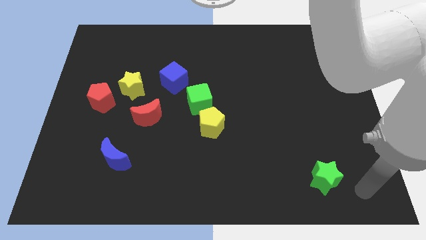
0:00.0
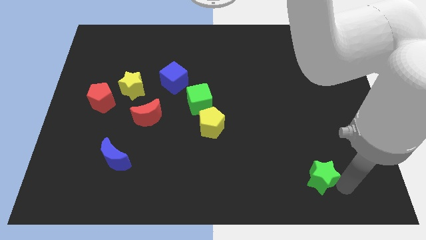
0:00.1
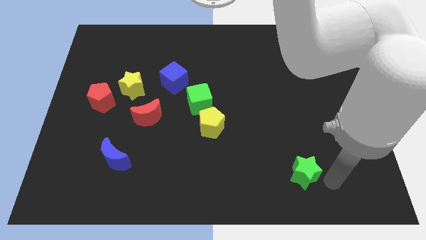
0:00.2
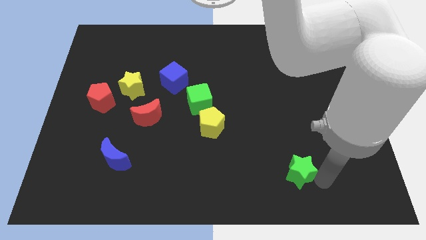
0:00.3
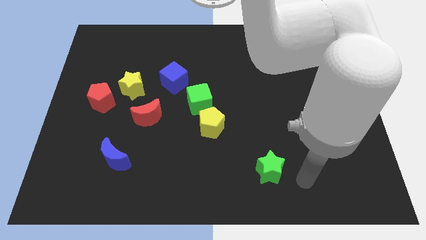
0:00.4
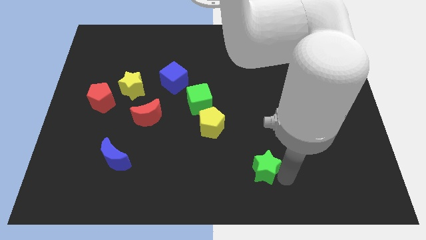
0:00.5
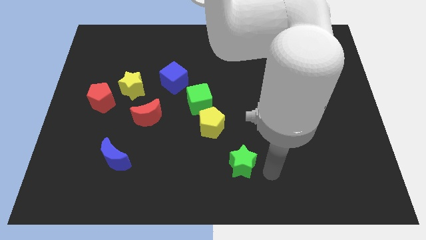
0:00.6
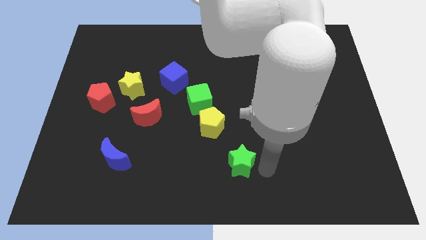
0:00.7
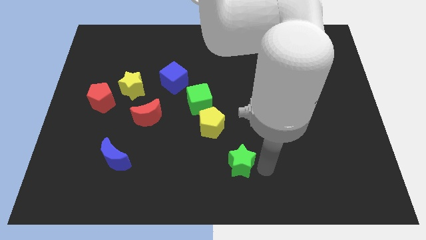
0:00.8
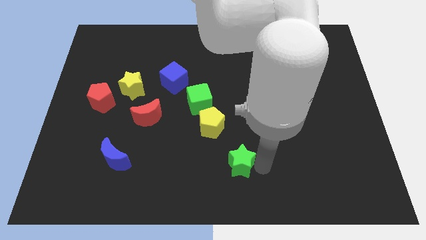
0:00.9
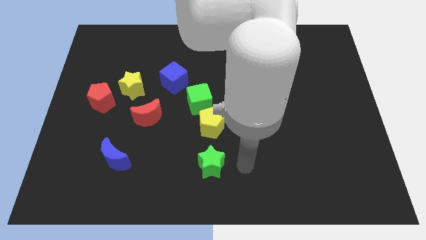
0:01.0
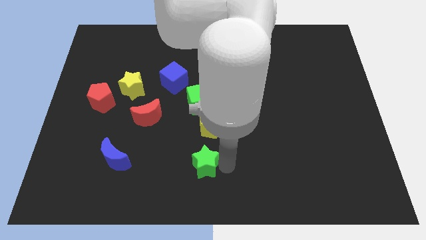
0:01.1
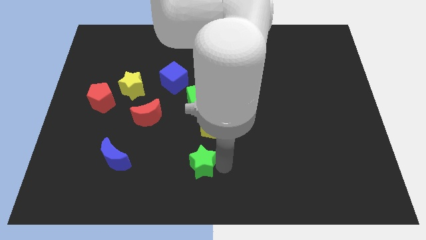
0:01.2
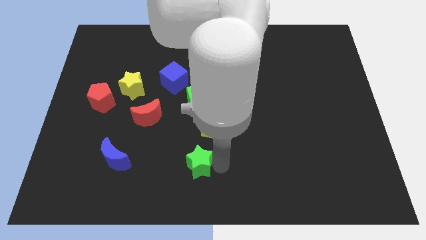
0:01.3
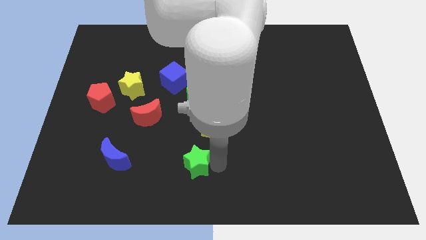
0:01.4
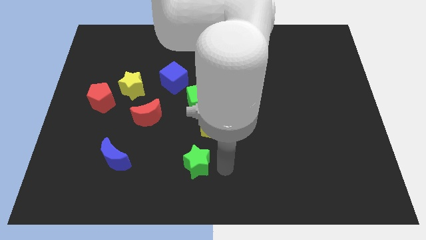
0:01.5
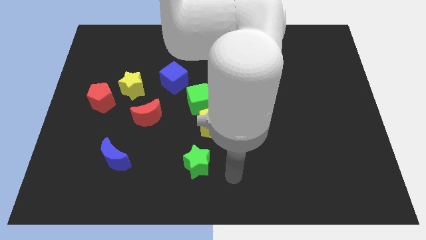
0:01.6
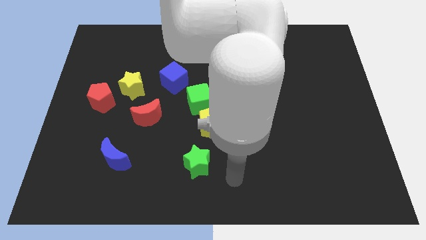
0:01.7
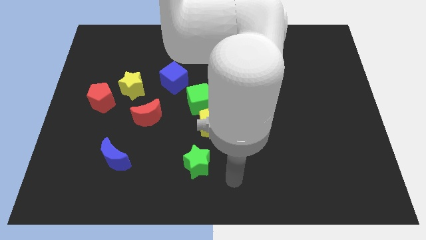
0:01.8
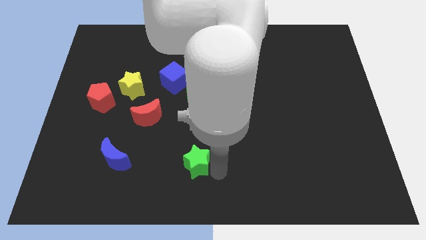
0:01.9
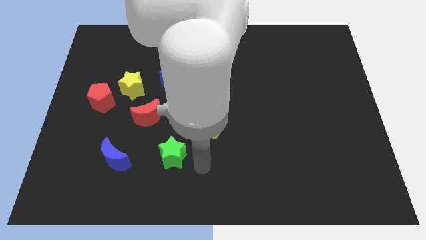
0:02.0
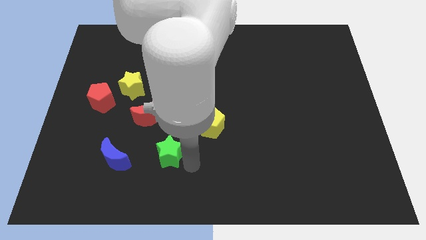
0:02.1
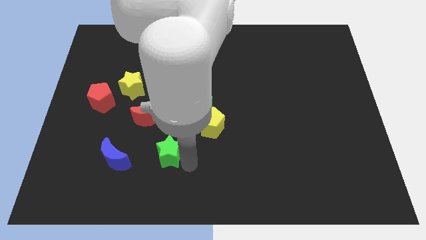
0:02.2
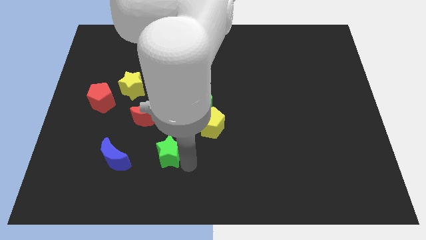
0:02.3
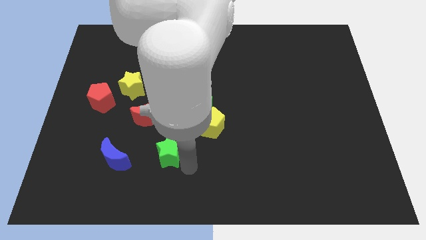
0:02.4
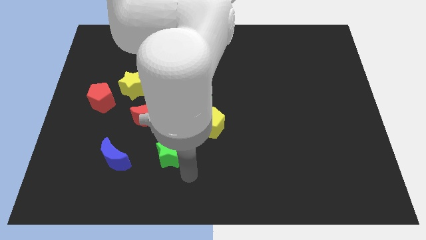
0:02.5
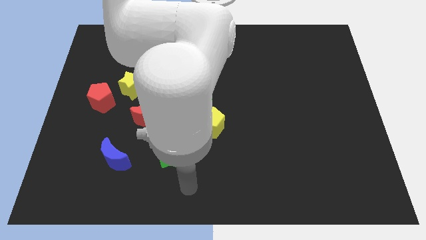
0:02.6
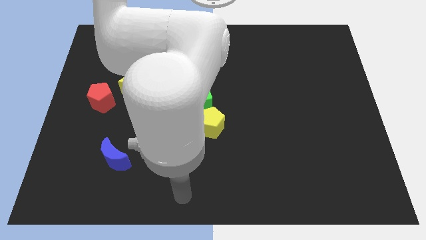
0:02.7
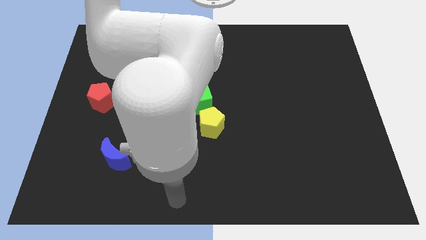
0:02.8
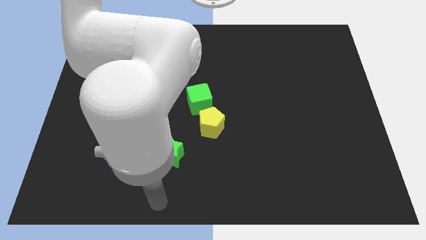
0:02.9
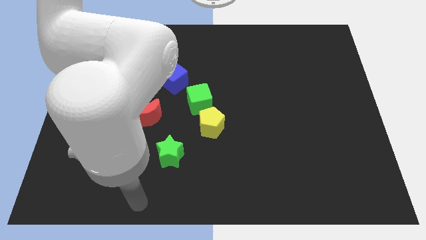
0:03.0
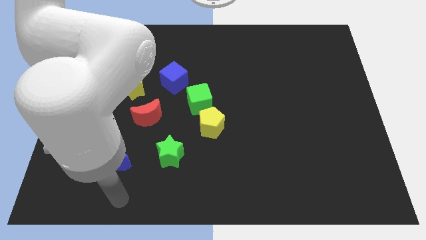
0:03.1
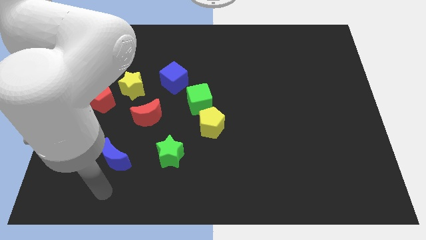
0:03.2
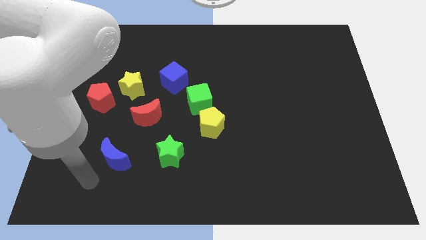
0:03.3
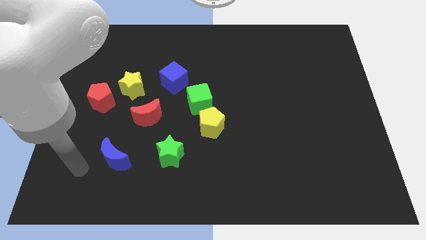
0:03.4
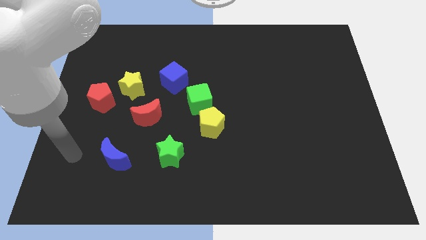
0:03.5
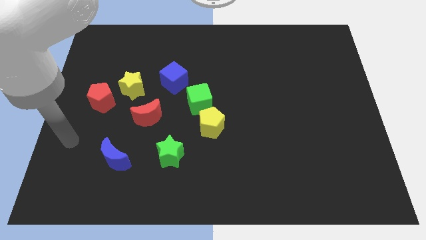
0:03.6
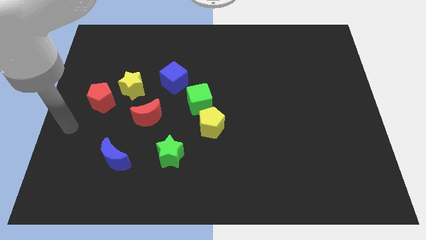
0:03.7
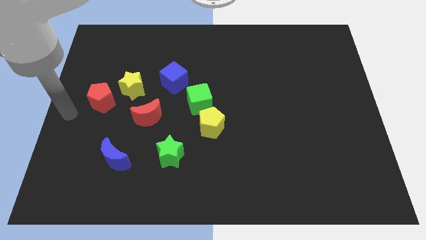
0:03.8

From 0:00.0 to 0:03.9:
move green star below the red moon

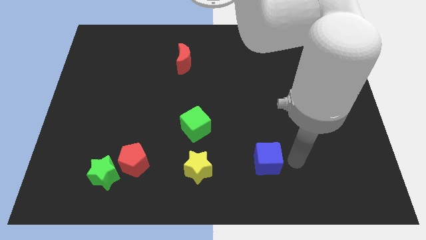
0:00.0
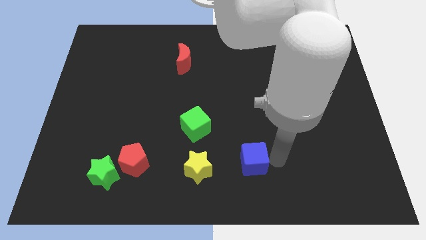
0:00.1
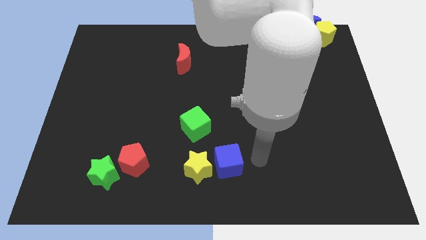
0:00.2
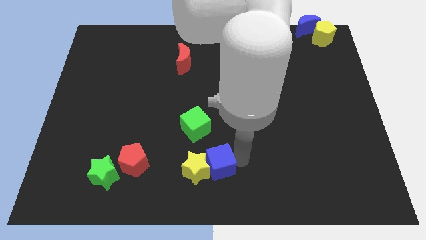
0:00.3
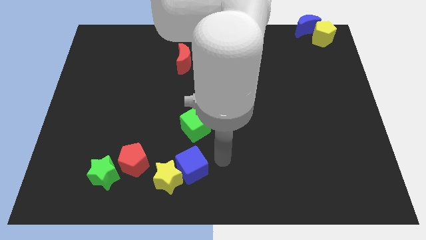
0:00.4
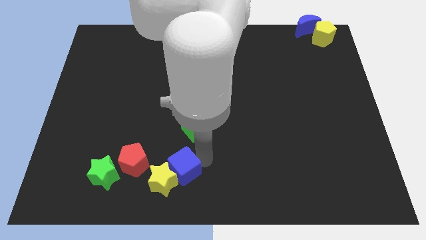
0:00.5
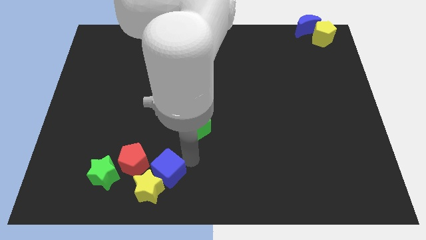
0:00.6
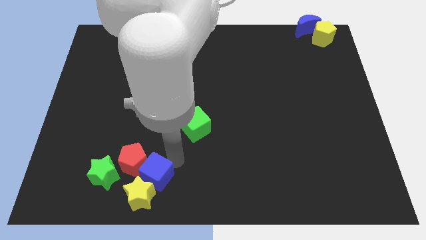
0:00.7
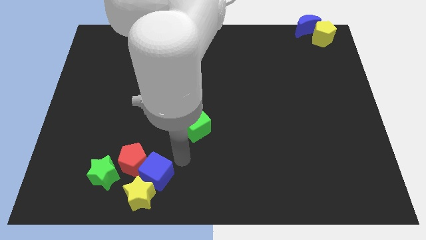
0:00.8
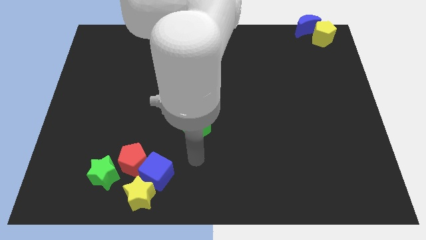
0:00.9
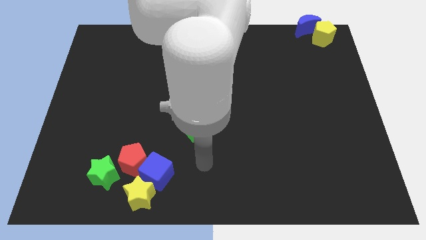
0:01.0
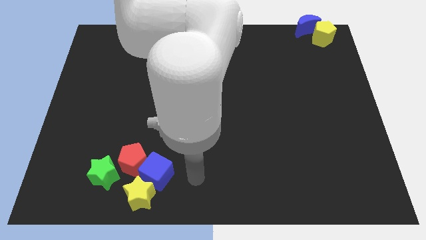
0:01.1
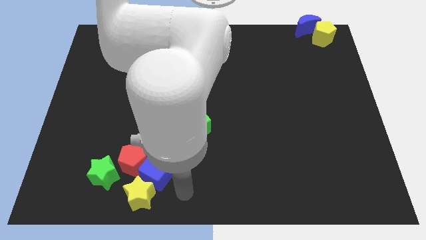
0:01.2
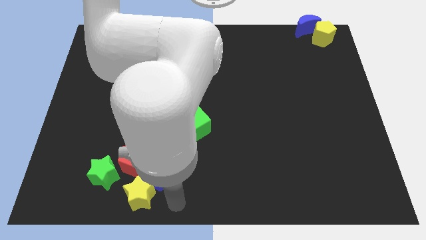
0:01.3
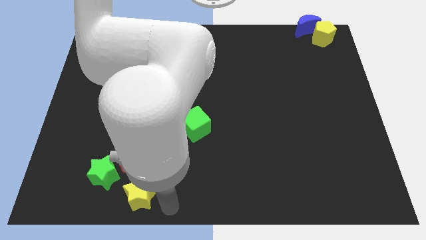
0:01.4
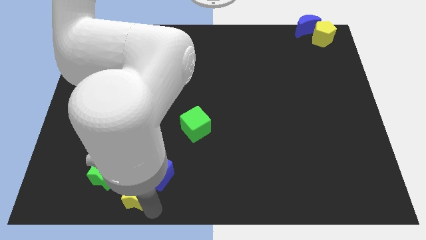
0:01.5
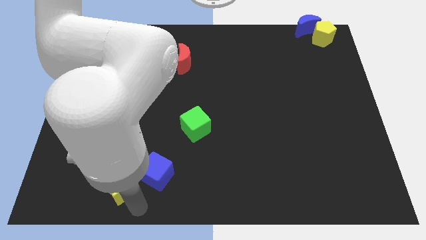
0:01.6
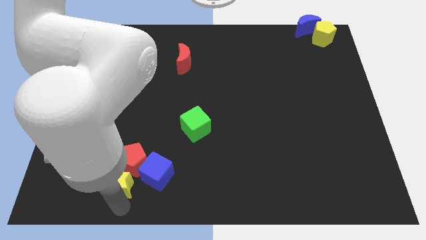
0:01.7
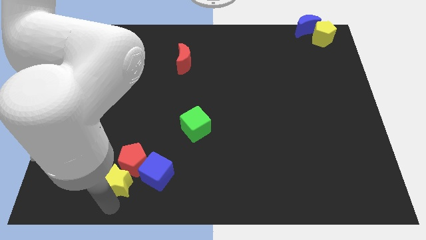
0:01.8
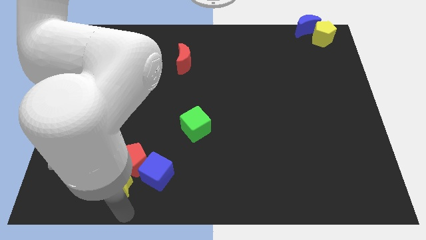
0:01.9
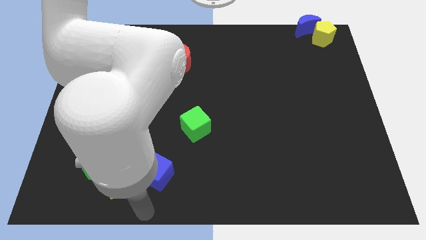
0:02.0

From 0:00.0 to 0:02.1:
move blue cube into the yellow star

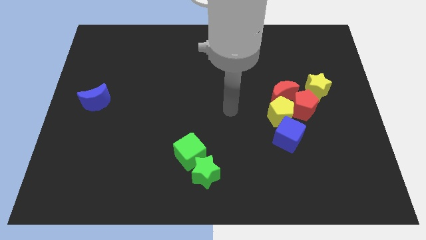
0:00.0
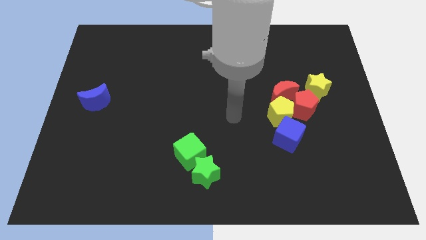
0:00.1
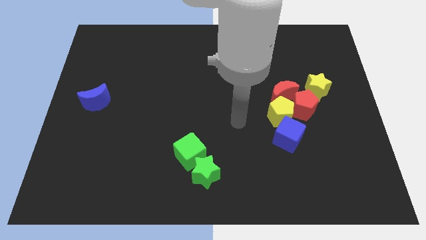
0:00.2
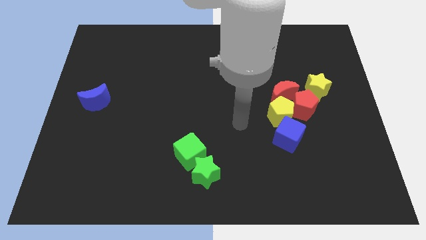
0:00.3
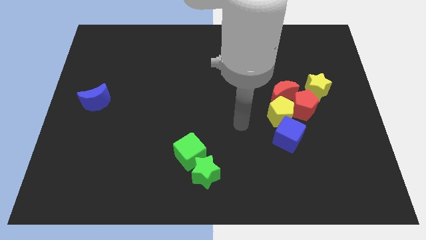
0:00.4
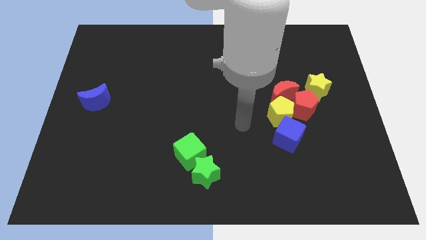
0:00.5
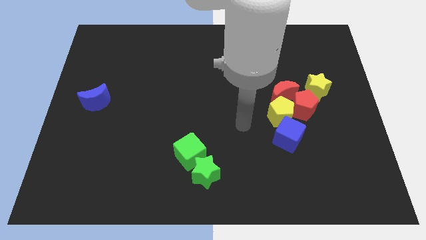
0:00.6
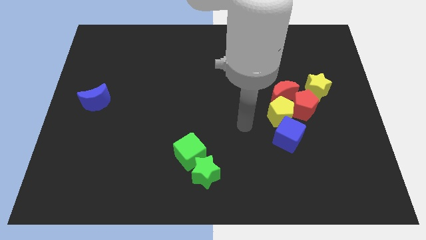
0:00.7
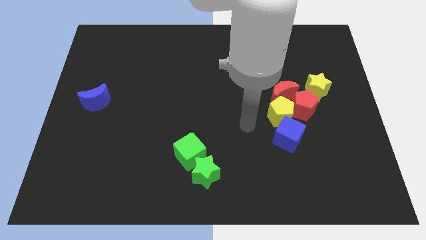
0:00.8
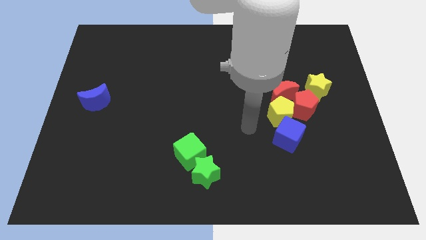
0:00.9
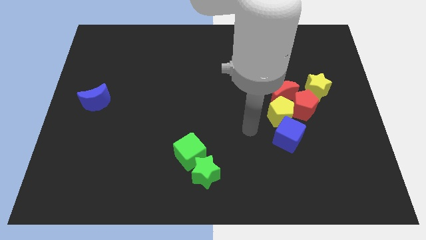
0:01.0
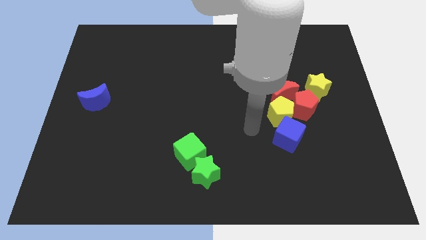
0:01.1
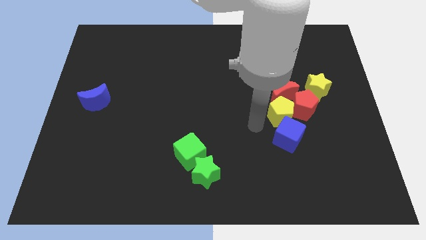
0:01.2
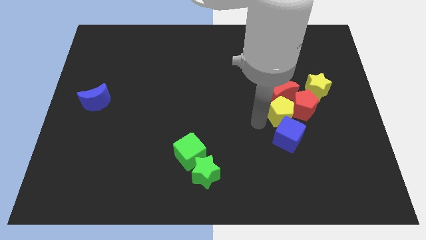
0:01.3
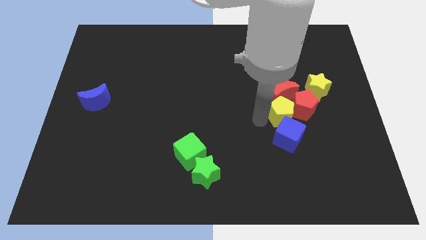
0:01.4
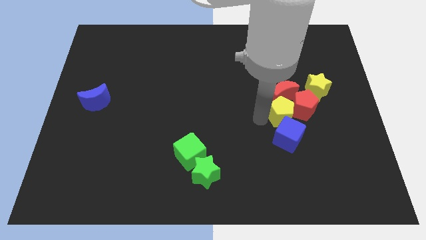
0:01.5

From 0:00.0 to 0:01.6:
place your arm to the left of the yellow pentagon

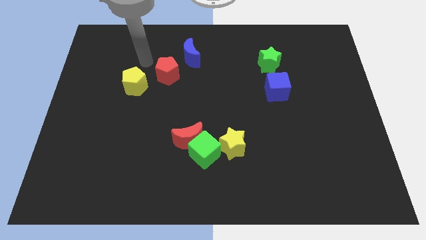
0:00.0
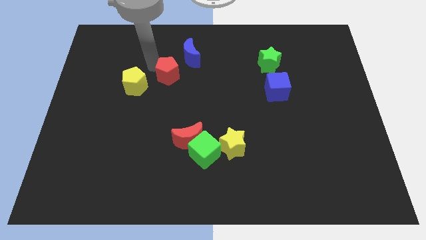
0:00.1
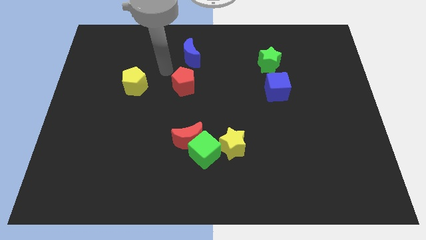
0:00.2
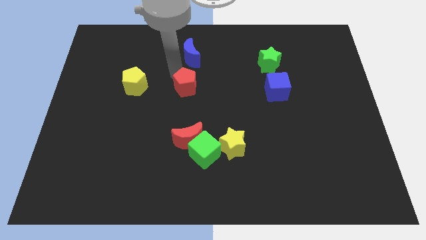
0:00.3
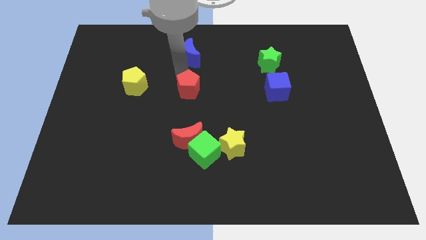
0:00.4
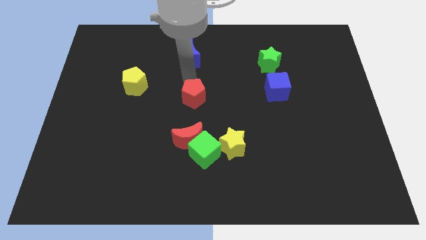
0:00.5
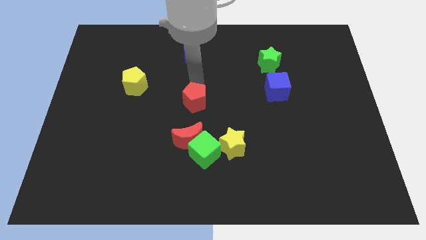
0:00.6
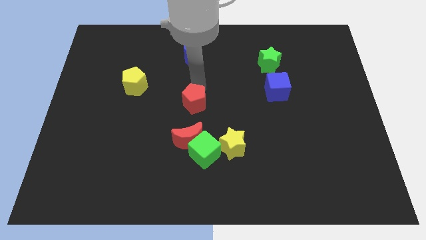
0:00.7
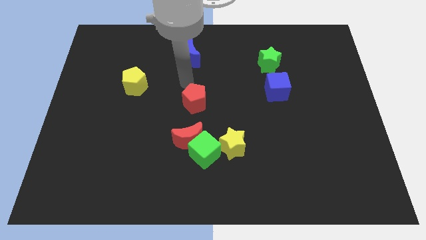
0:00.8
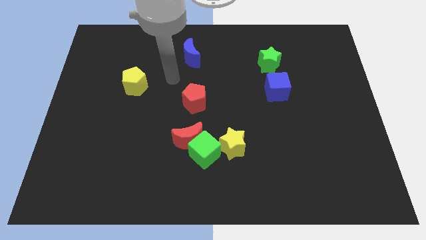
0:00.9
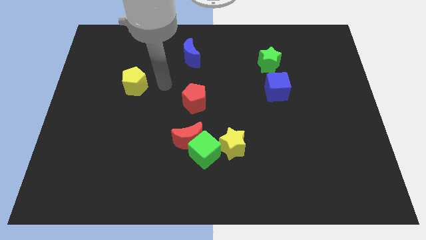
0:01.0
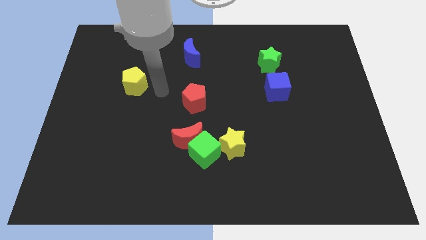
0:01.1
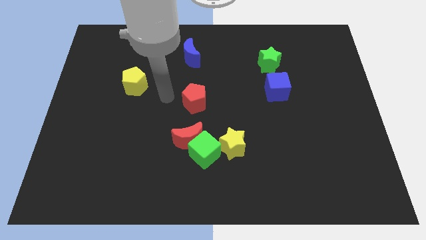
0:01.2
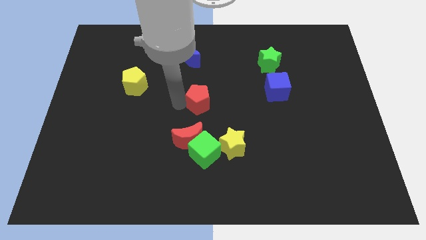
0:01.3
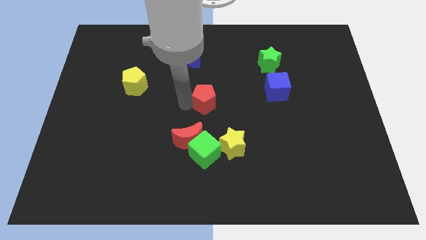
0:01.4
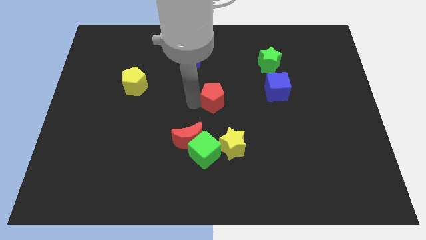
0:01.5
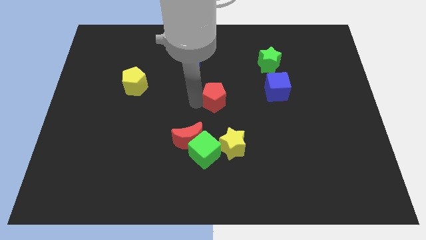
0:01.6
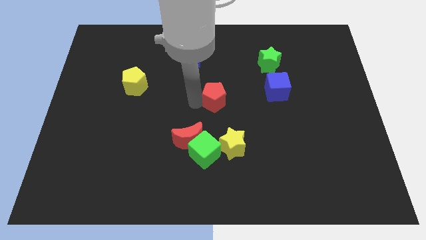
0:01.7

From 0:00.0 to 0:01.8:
slide the red pentagon towards the center of the board
